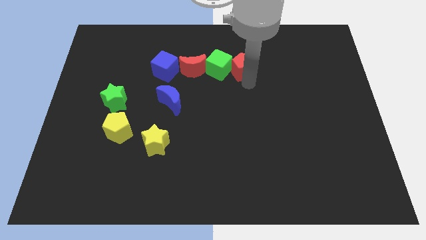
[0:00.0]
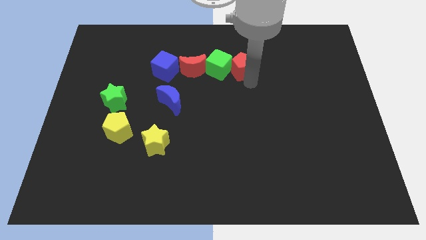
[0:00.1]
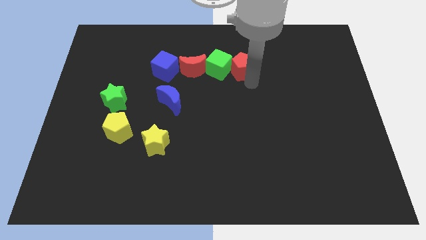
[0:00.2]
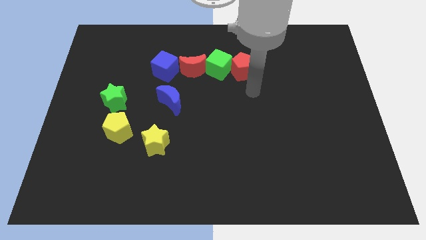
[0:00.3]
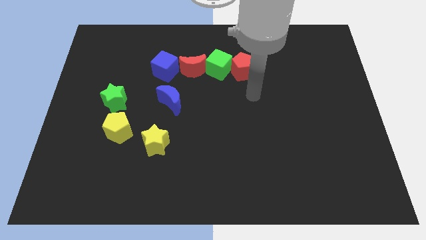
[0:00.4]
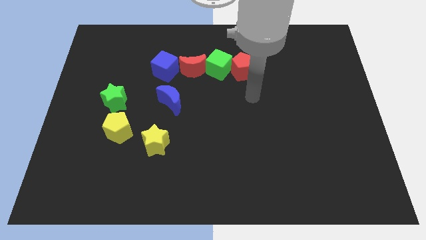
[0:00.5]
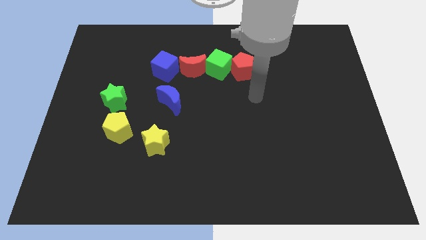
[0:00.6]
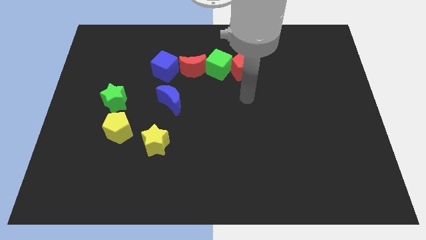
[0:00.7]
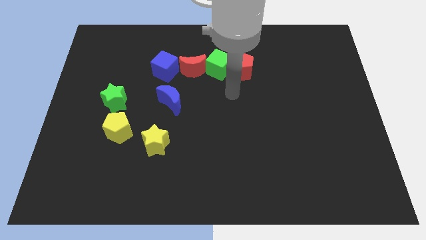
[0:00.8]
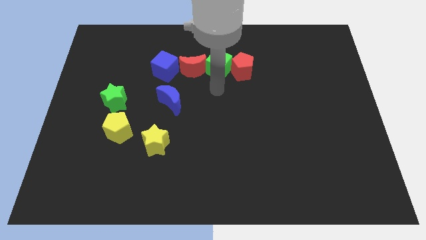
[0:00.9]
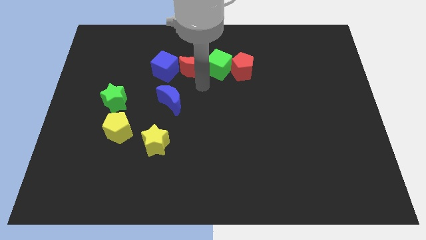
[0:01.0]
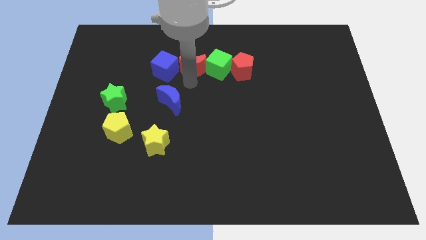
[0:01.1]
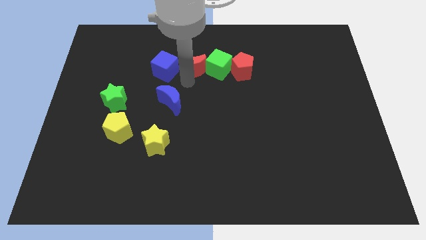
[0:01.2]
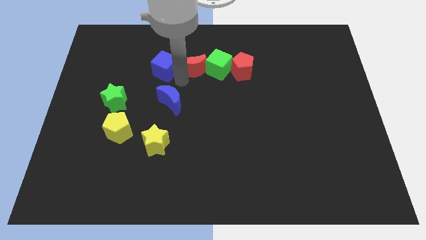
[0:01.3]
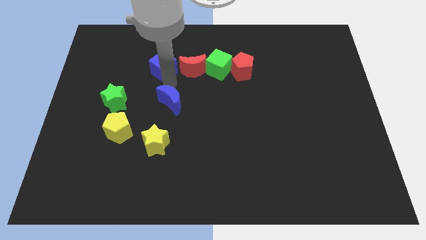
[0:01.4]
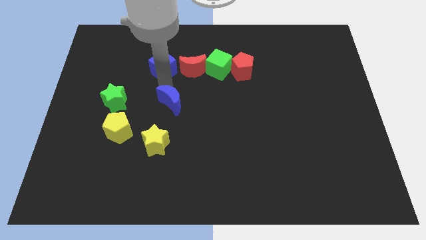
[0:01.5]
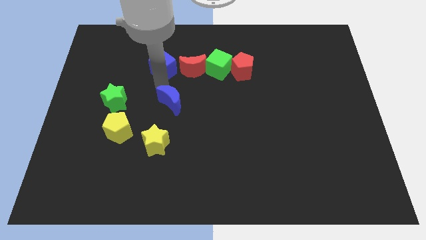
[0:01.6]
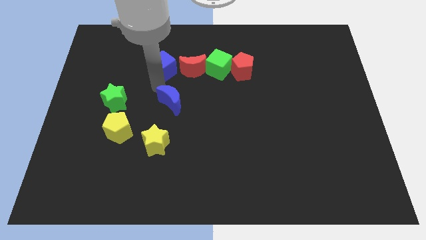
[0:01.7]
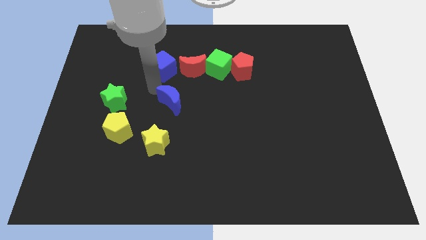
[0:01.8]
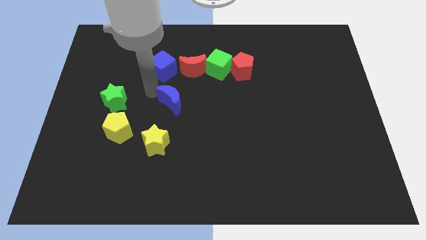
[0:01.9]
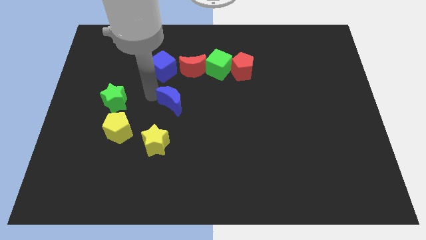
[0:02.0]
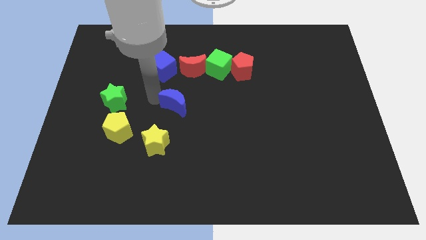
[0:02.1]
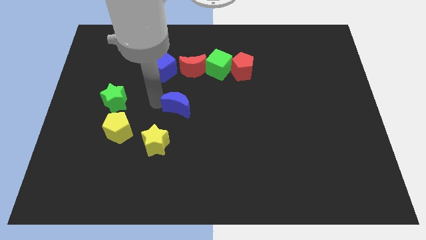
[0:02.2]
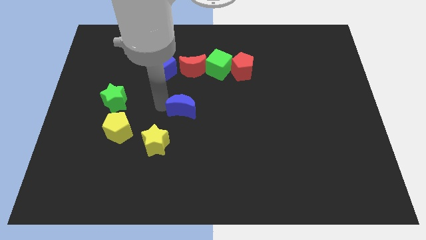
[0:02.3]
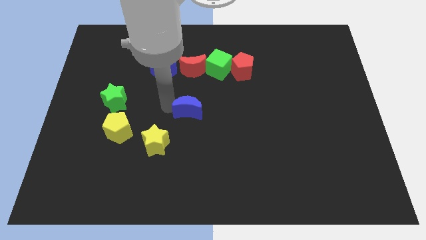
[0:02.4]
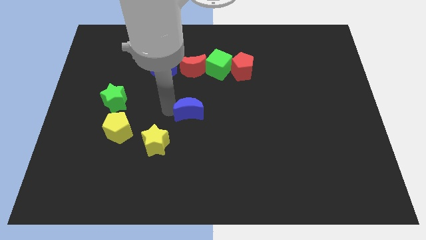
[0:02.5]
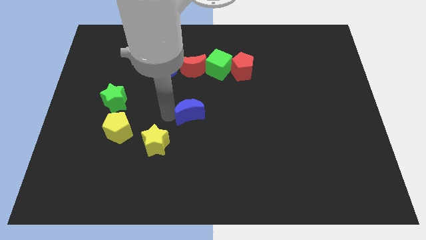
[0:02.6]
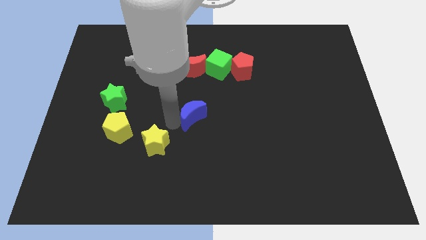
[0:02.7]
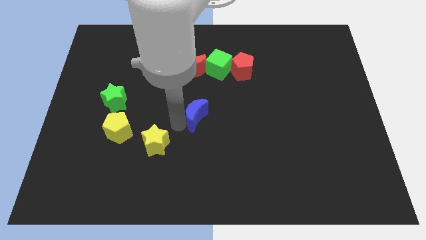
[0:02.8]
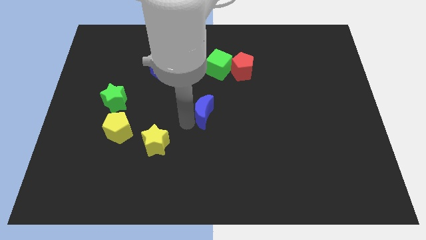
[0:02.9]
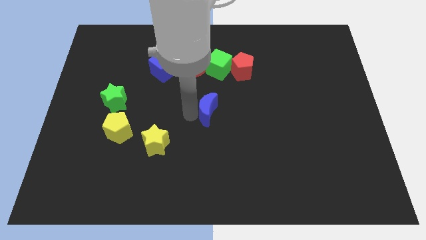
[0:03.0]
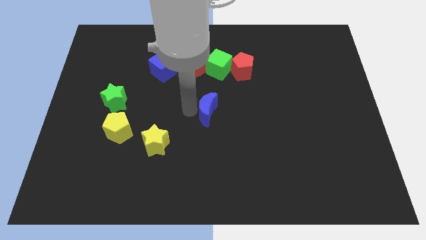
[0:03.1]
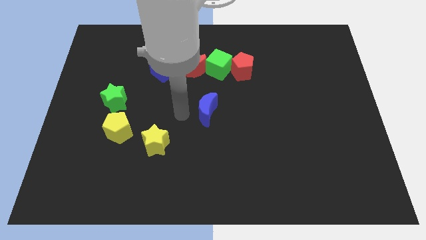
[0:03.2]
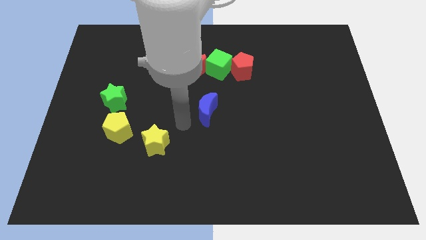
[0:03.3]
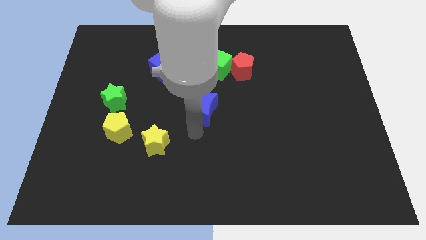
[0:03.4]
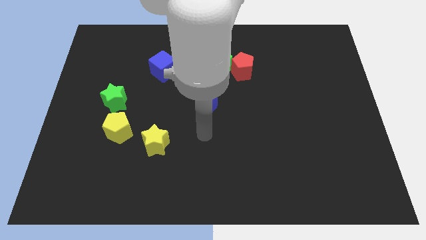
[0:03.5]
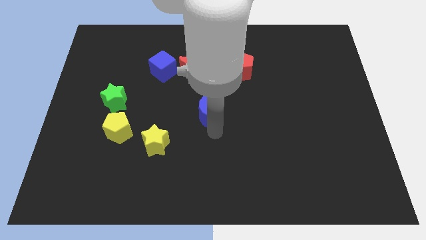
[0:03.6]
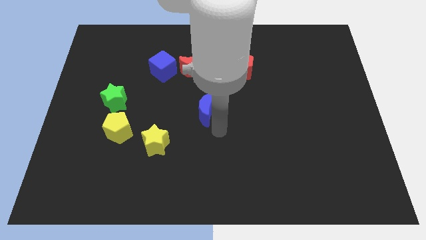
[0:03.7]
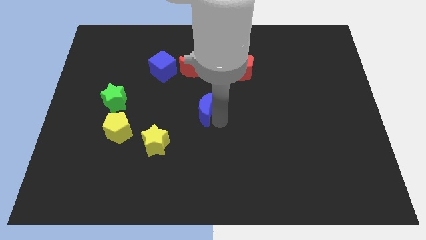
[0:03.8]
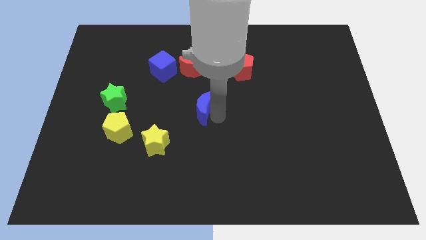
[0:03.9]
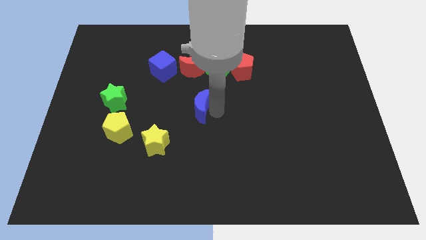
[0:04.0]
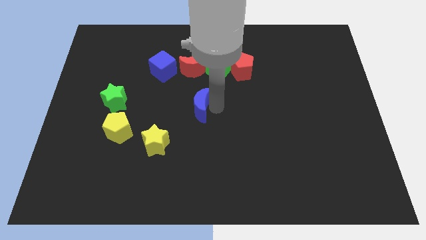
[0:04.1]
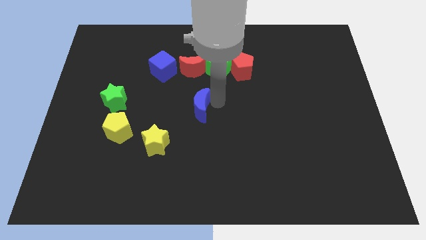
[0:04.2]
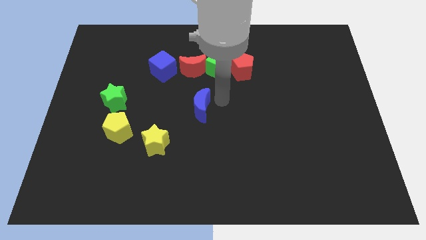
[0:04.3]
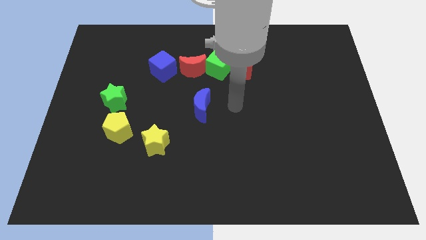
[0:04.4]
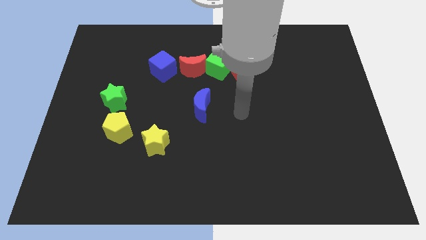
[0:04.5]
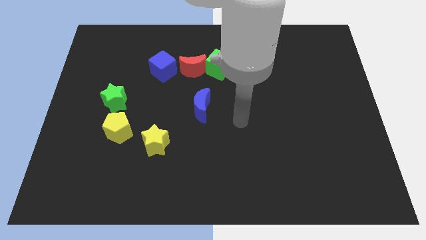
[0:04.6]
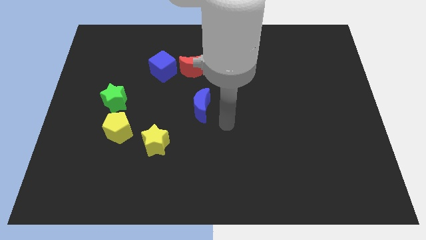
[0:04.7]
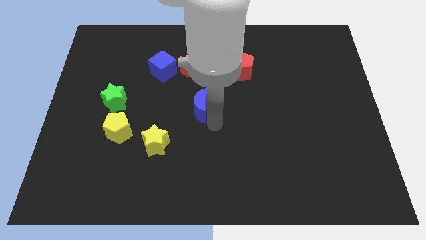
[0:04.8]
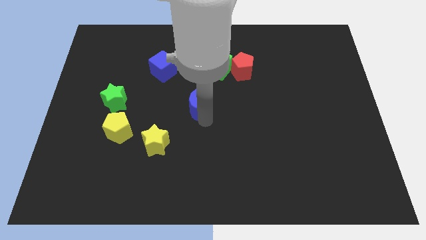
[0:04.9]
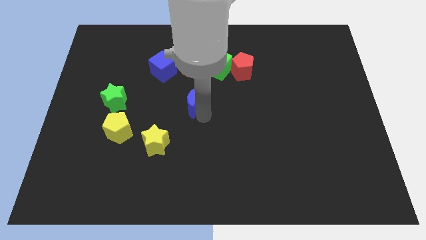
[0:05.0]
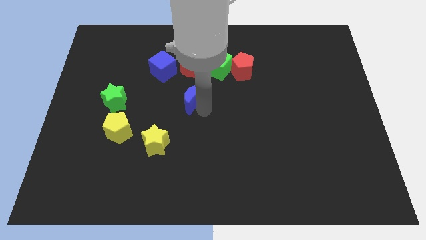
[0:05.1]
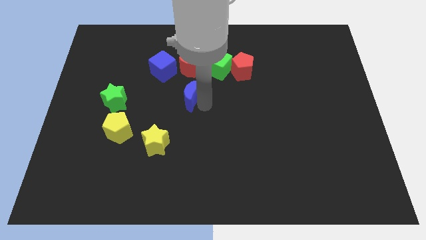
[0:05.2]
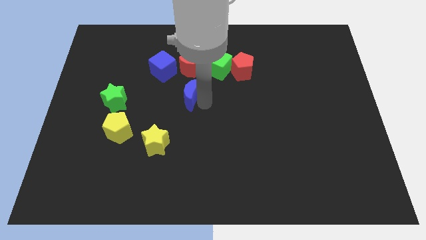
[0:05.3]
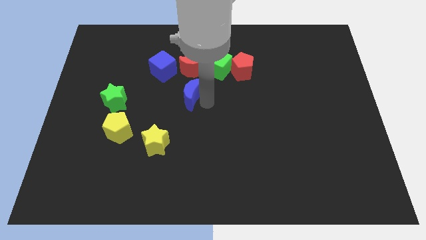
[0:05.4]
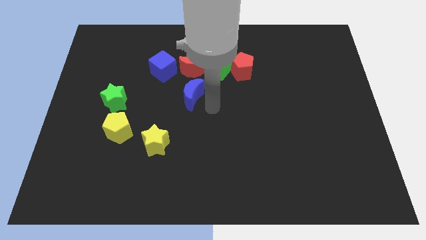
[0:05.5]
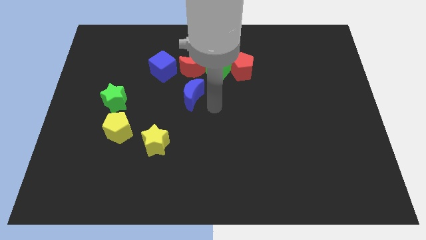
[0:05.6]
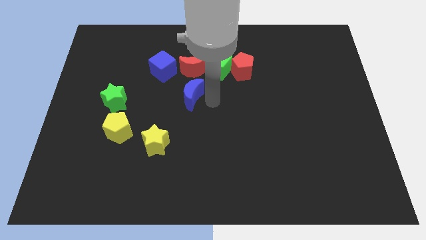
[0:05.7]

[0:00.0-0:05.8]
place the blue moon below the red moon

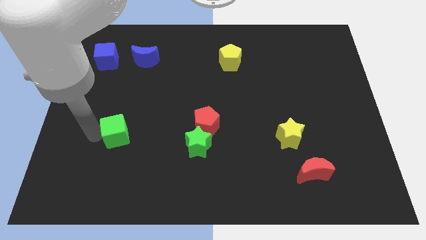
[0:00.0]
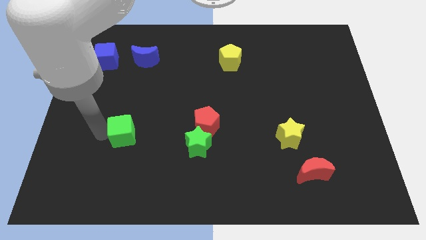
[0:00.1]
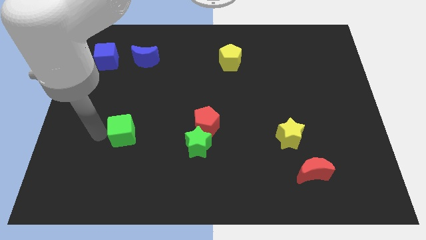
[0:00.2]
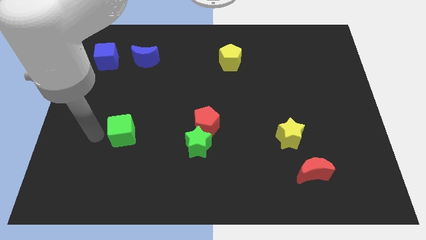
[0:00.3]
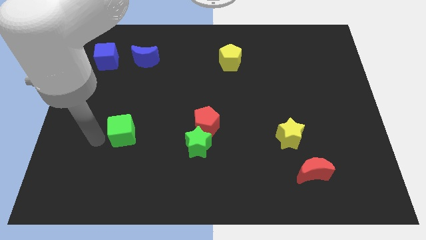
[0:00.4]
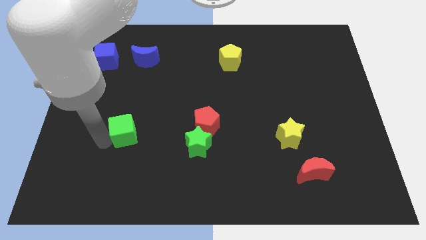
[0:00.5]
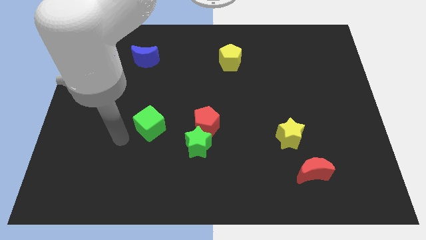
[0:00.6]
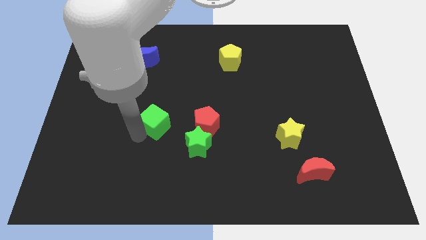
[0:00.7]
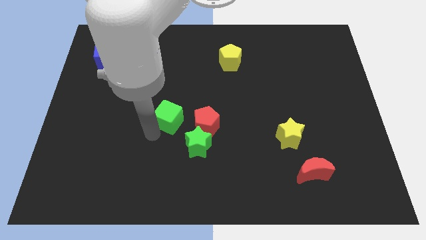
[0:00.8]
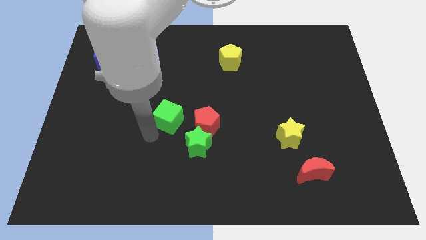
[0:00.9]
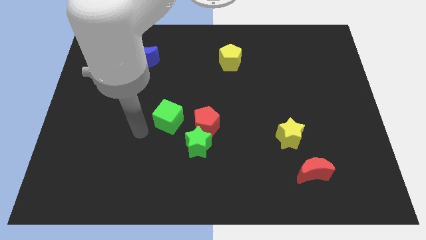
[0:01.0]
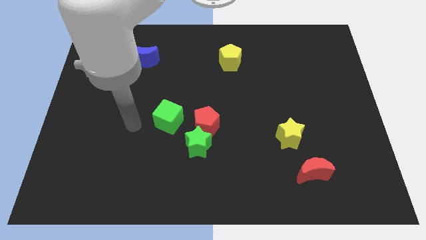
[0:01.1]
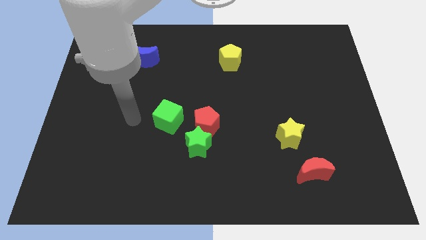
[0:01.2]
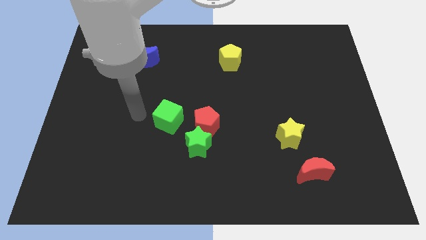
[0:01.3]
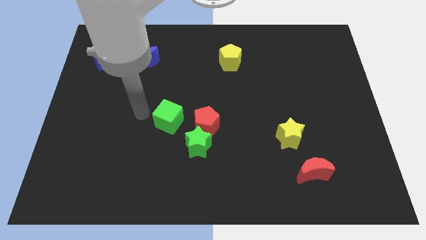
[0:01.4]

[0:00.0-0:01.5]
slide the green cube towards the red pentagon

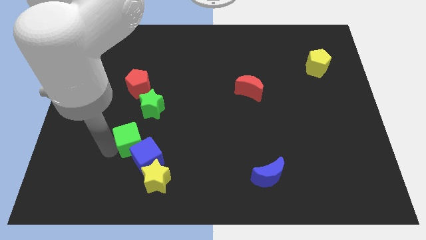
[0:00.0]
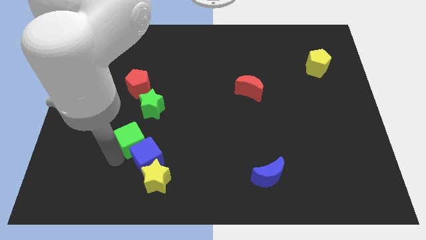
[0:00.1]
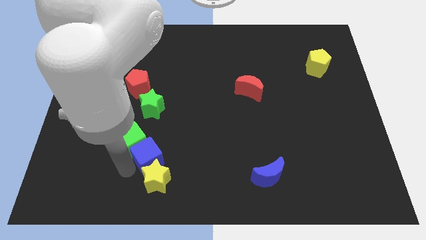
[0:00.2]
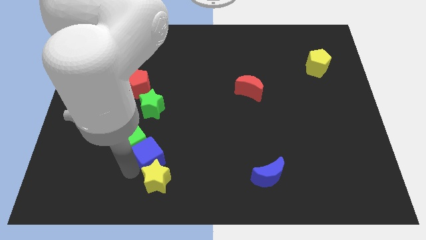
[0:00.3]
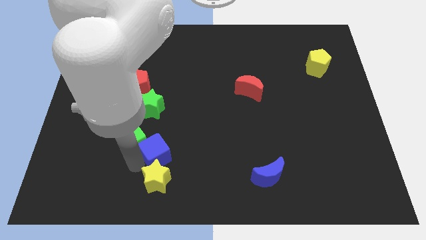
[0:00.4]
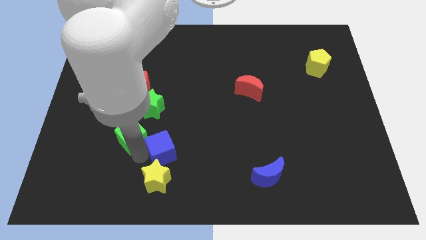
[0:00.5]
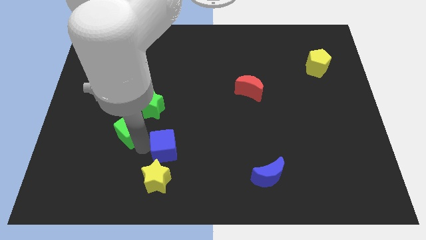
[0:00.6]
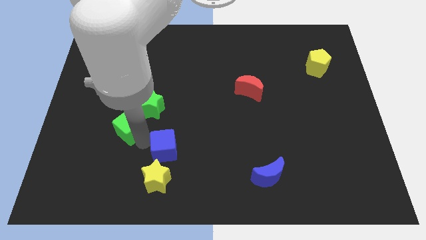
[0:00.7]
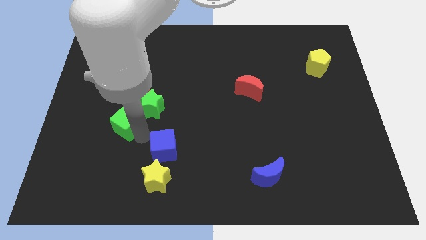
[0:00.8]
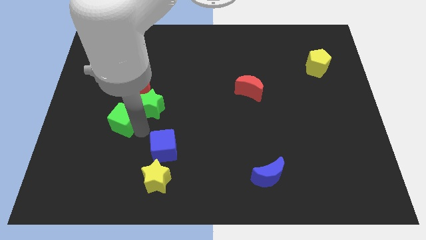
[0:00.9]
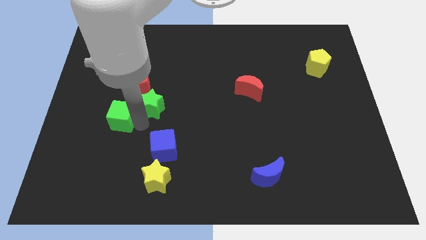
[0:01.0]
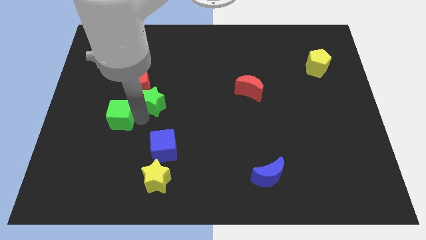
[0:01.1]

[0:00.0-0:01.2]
push the green cube slightly to the top

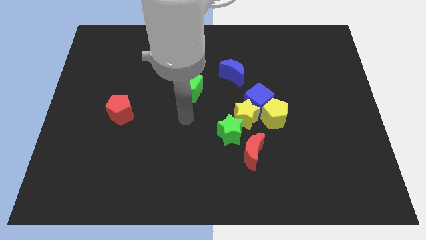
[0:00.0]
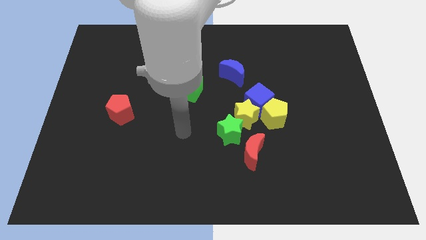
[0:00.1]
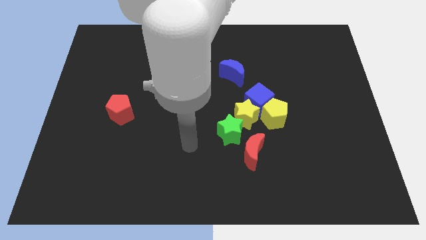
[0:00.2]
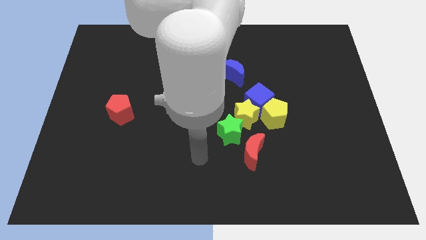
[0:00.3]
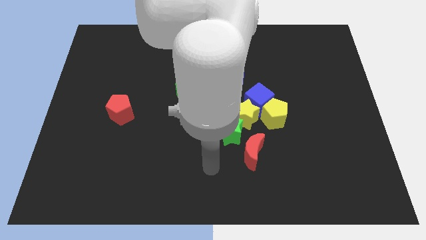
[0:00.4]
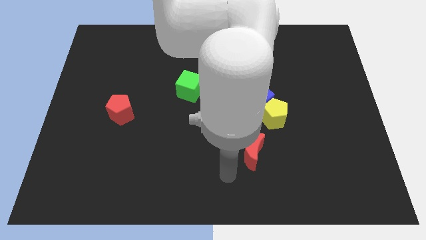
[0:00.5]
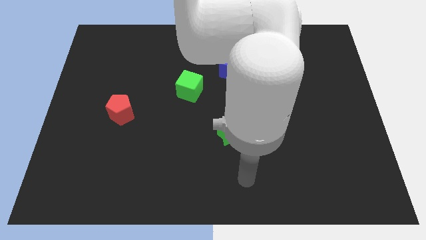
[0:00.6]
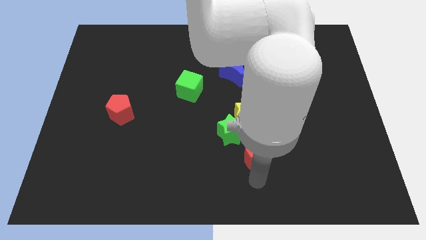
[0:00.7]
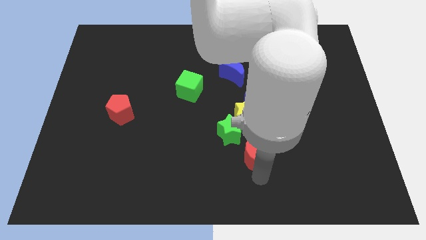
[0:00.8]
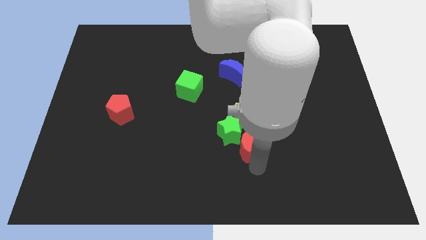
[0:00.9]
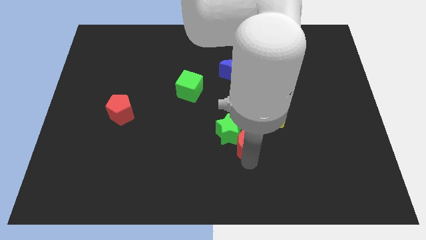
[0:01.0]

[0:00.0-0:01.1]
move the arm below the red moon
